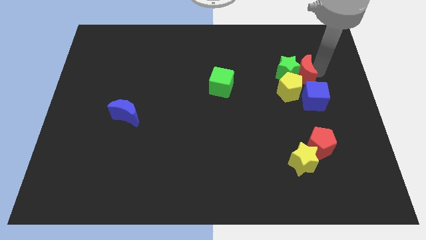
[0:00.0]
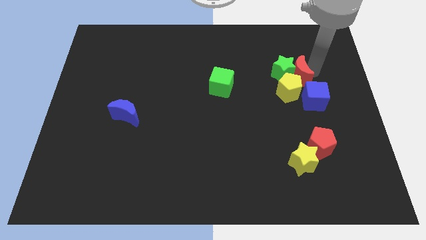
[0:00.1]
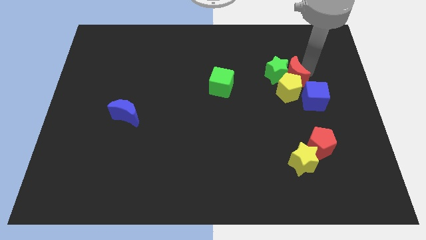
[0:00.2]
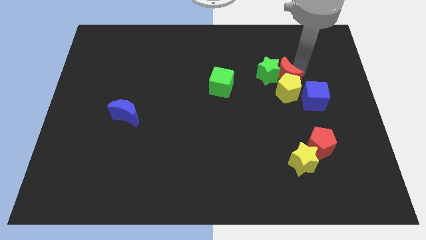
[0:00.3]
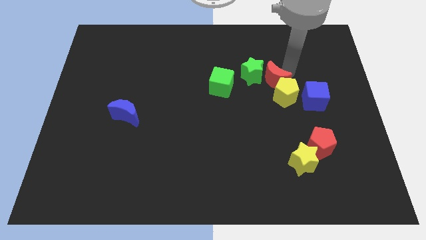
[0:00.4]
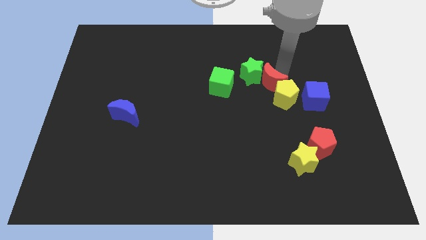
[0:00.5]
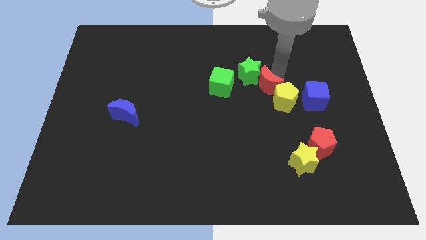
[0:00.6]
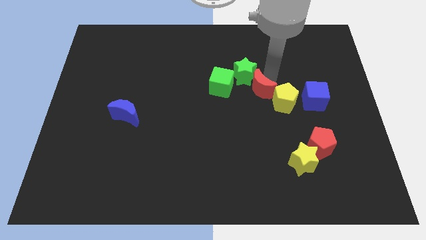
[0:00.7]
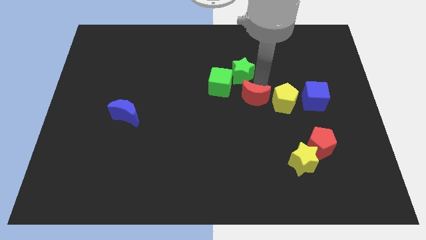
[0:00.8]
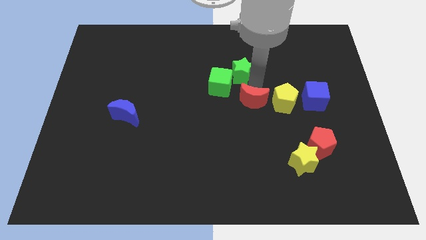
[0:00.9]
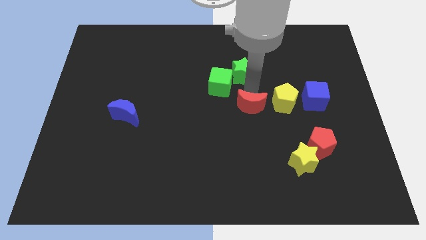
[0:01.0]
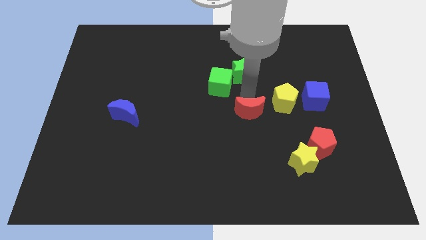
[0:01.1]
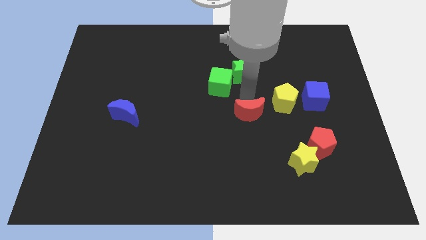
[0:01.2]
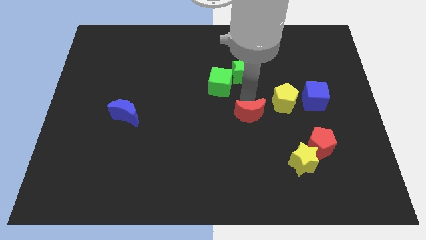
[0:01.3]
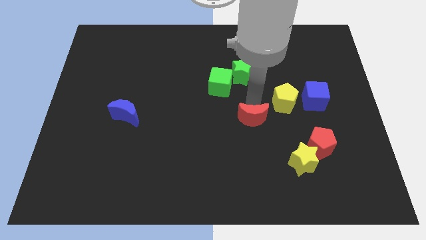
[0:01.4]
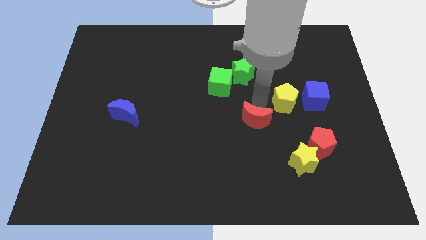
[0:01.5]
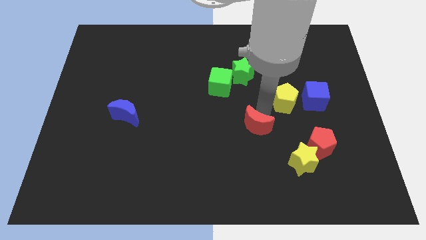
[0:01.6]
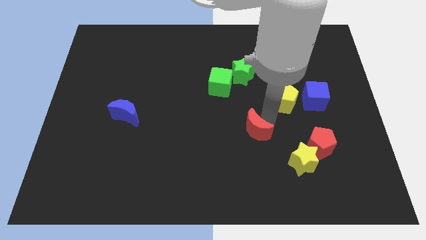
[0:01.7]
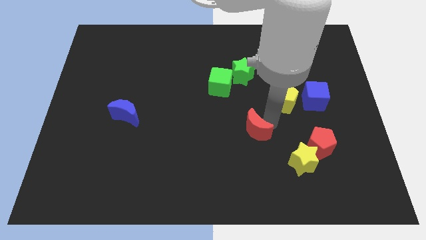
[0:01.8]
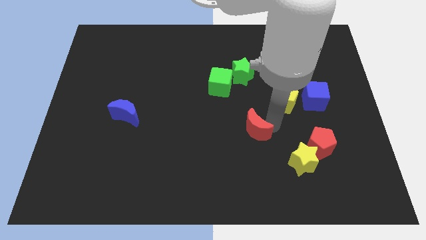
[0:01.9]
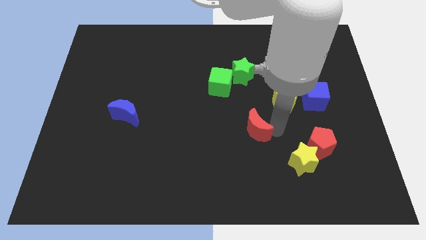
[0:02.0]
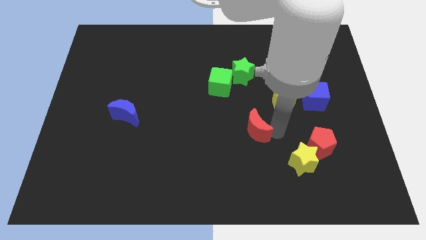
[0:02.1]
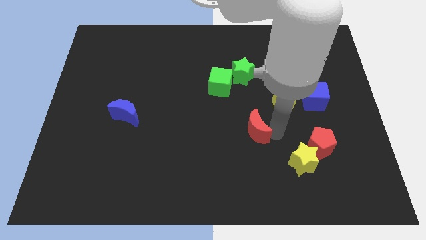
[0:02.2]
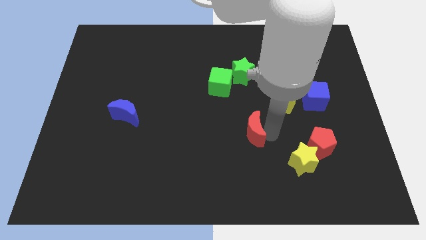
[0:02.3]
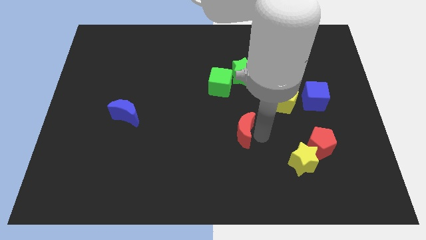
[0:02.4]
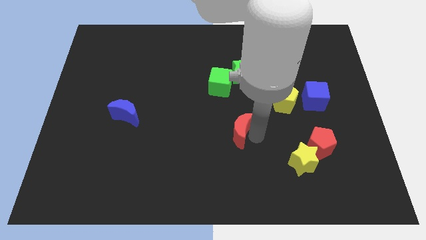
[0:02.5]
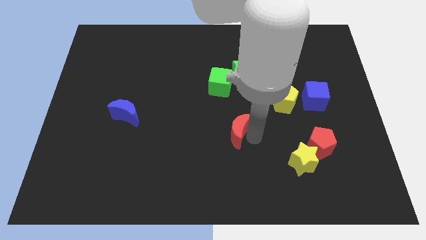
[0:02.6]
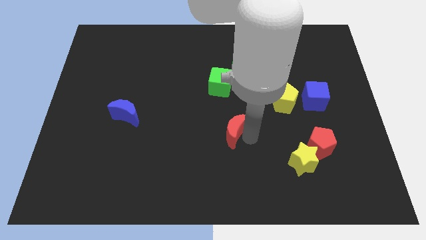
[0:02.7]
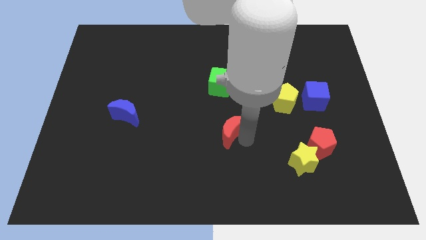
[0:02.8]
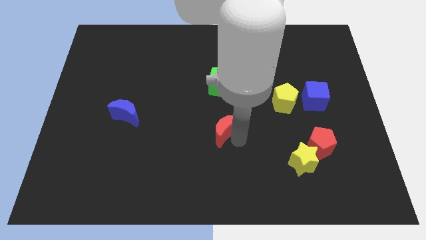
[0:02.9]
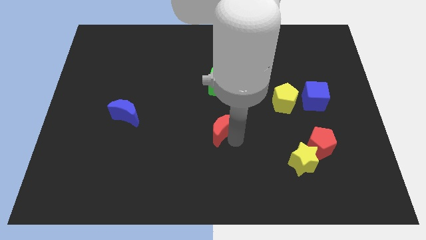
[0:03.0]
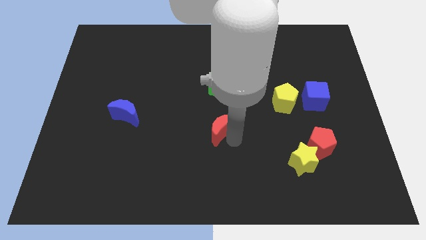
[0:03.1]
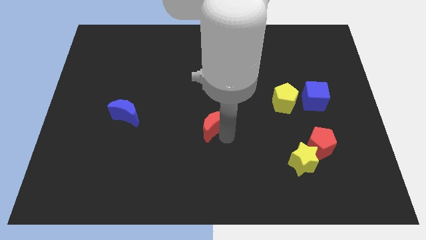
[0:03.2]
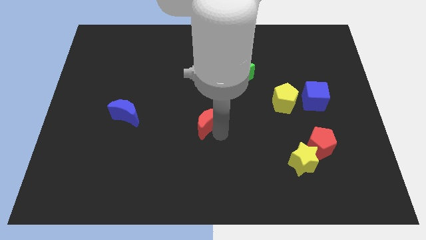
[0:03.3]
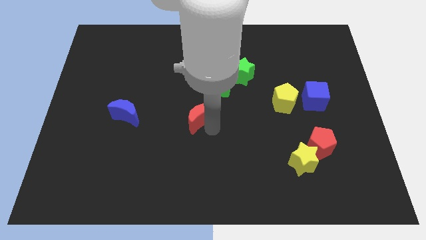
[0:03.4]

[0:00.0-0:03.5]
separate the green star yellow pentagon and the red moon

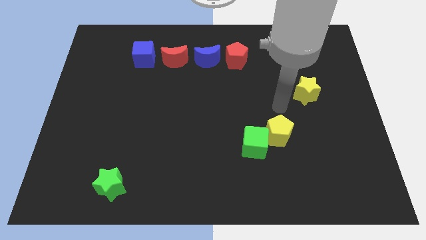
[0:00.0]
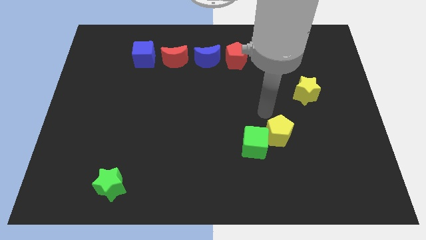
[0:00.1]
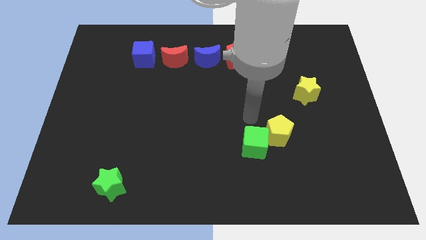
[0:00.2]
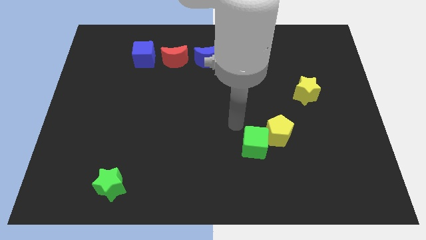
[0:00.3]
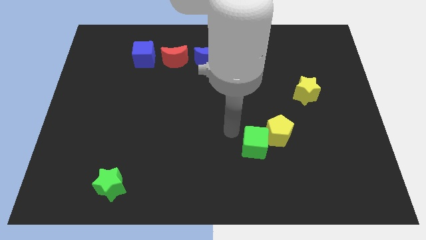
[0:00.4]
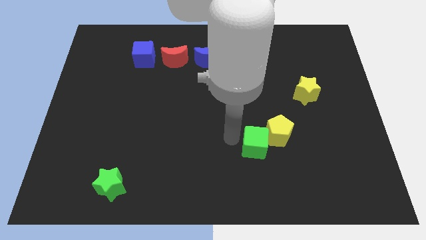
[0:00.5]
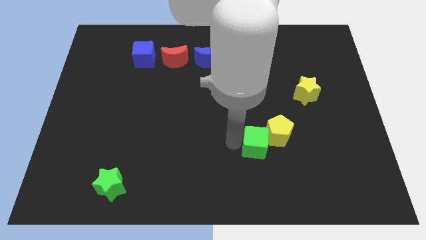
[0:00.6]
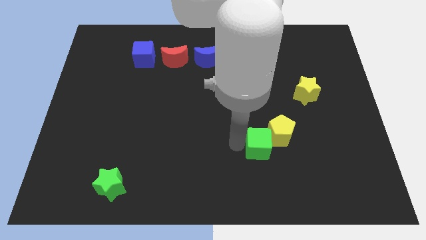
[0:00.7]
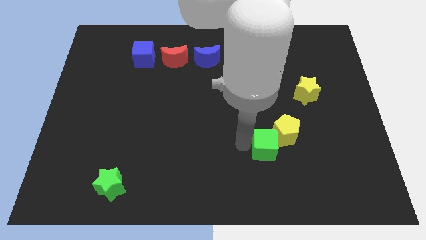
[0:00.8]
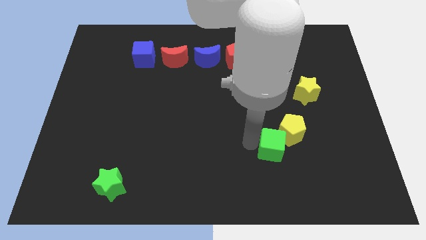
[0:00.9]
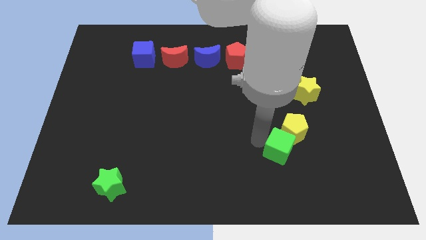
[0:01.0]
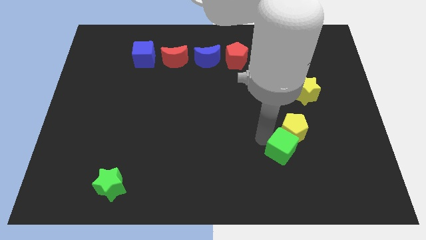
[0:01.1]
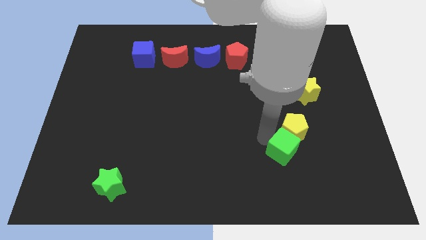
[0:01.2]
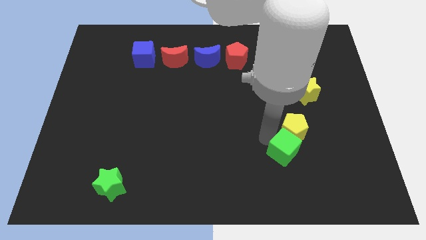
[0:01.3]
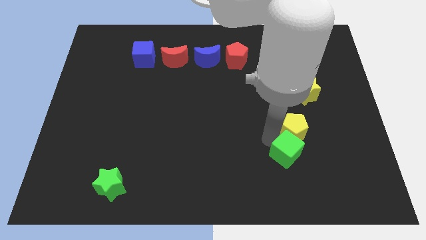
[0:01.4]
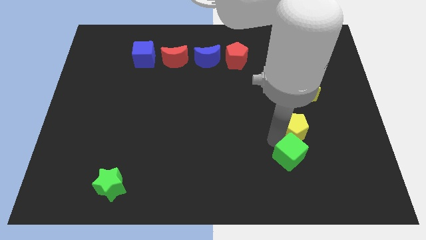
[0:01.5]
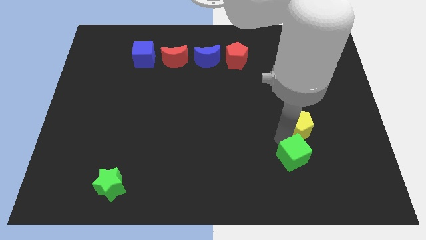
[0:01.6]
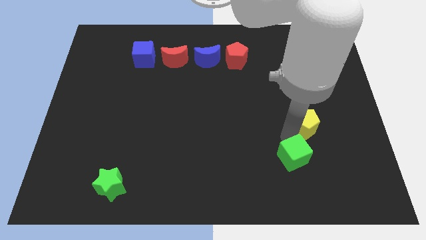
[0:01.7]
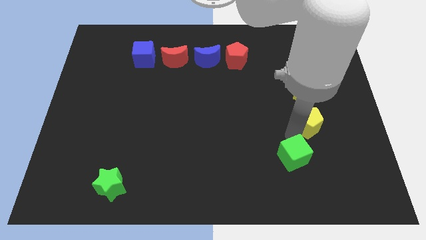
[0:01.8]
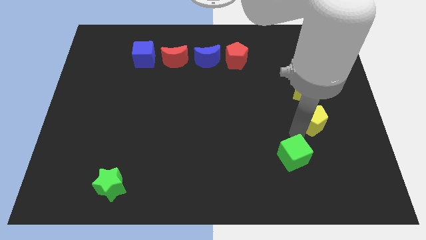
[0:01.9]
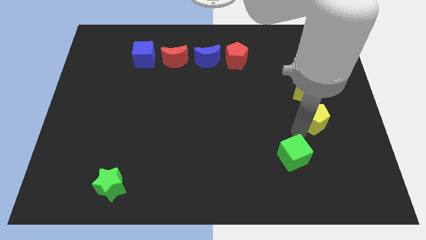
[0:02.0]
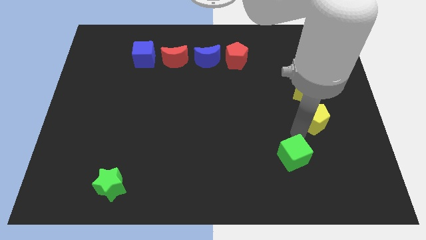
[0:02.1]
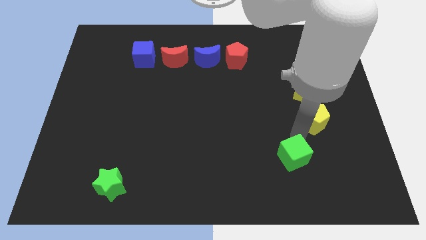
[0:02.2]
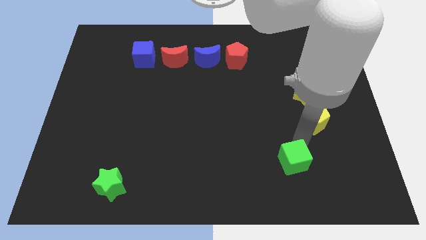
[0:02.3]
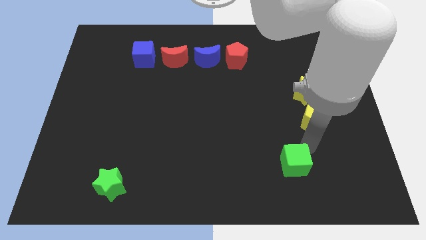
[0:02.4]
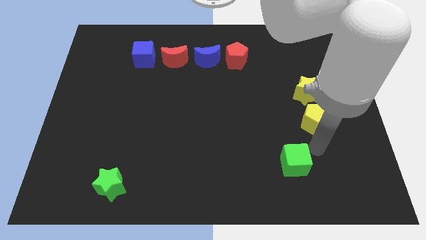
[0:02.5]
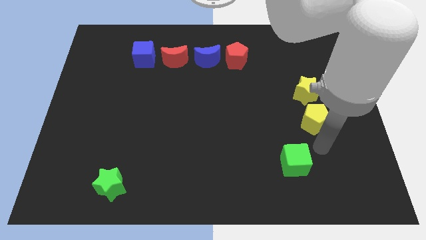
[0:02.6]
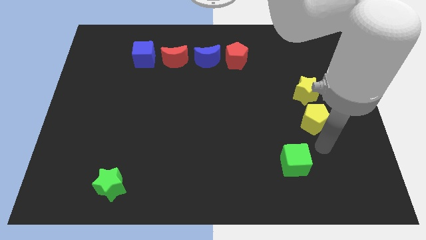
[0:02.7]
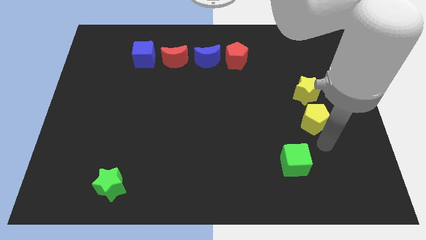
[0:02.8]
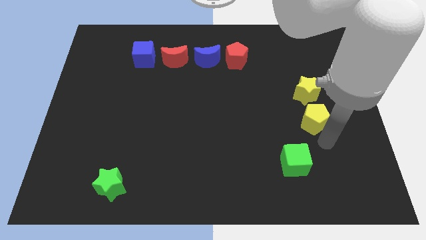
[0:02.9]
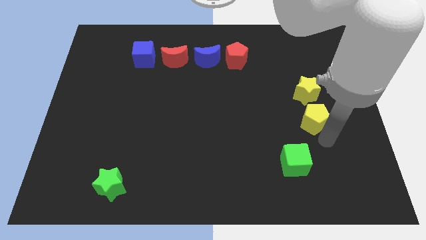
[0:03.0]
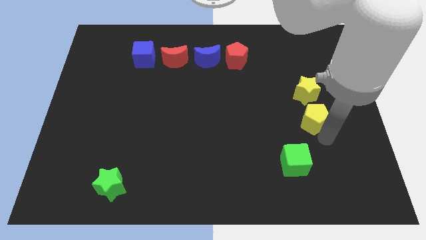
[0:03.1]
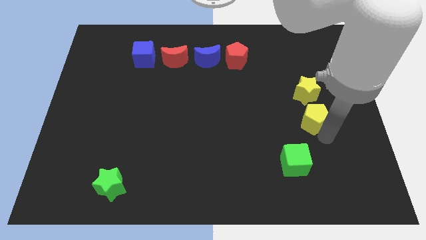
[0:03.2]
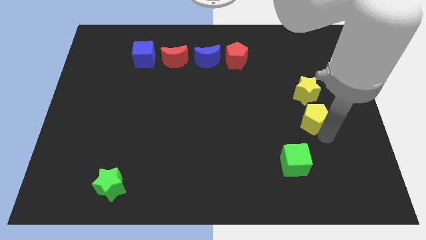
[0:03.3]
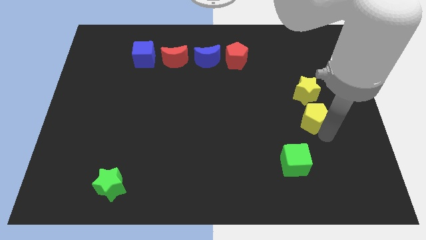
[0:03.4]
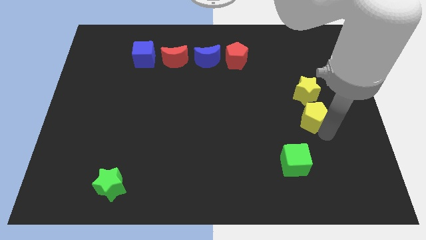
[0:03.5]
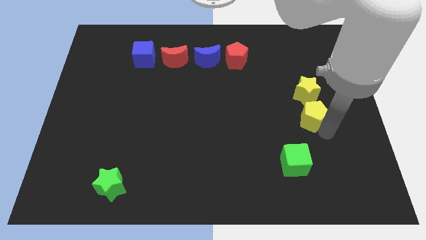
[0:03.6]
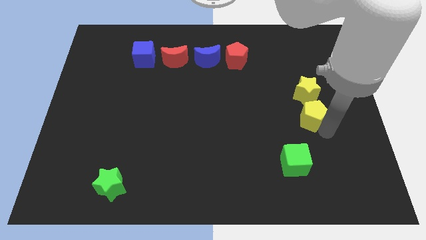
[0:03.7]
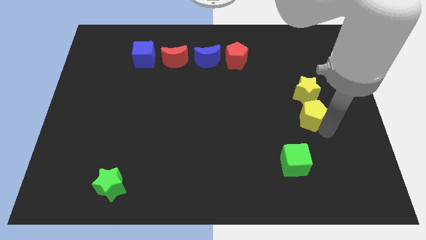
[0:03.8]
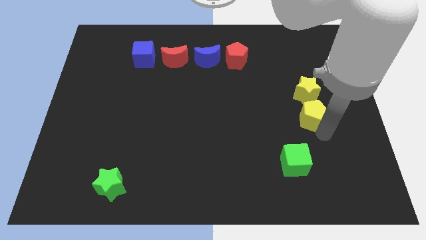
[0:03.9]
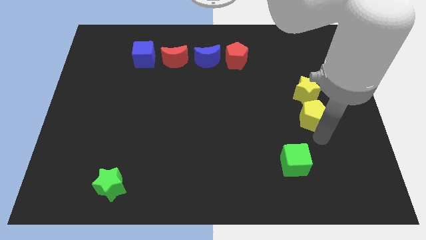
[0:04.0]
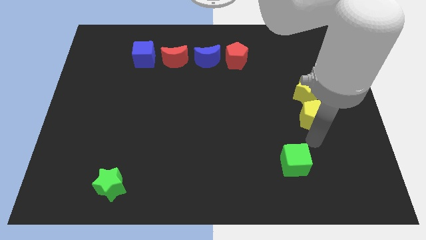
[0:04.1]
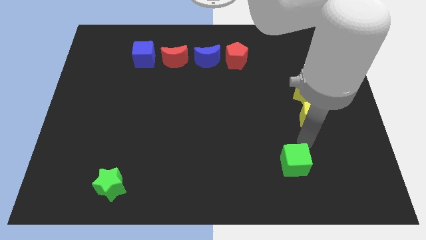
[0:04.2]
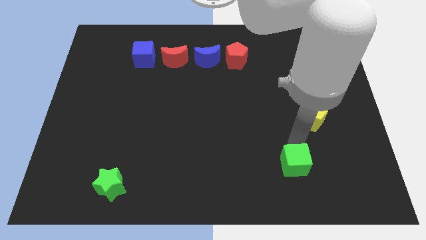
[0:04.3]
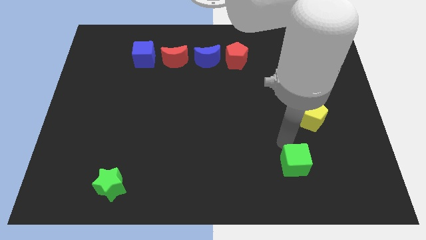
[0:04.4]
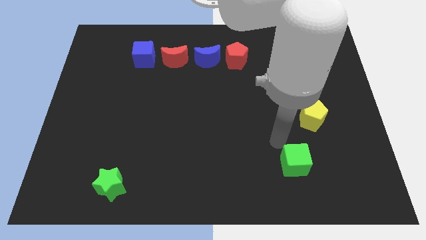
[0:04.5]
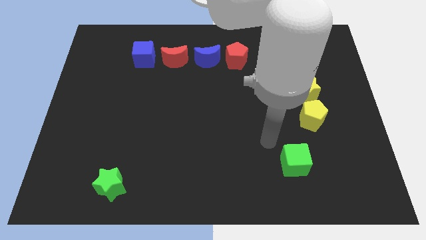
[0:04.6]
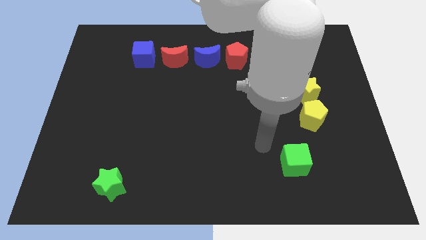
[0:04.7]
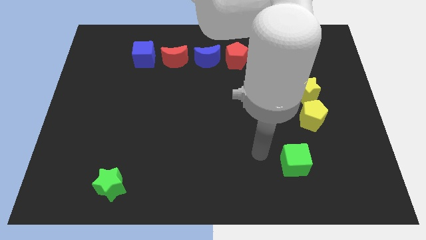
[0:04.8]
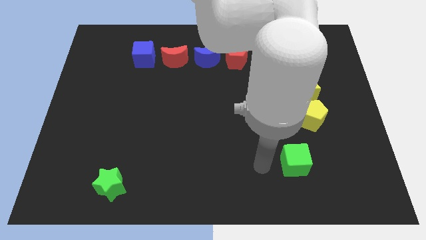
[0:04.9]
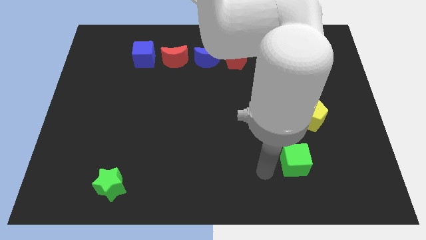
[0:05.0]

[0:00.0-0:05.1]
separate the green cube and the yellow pentagon

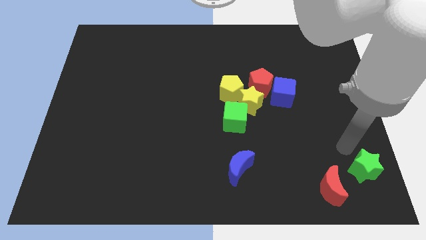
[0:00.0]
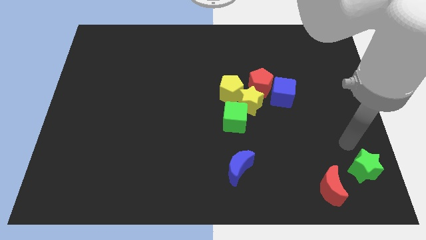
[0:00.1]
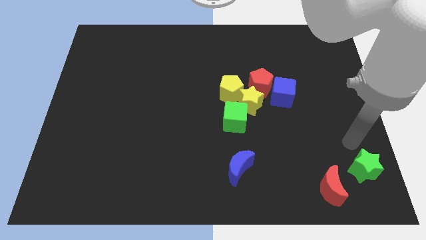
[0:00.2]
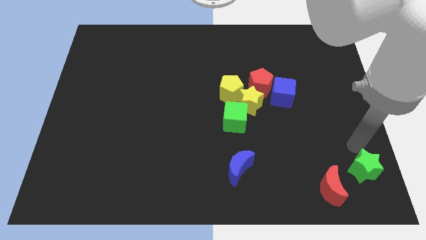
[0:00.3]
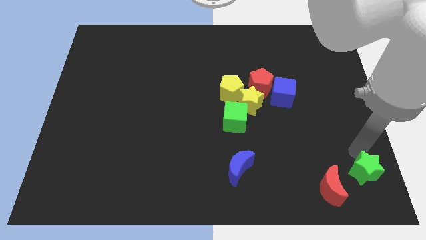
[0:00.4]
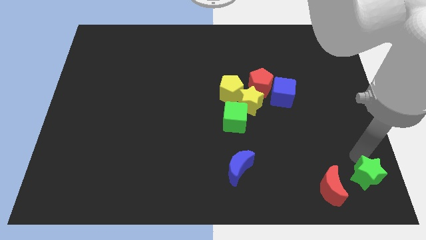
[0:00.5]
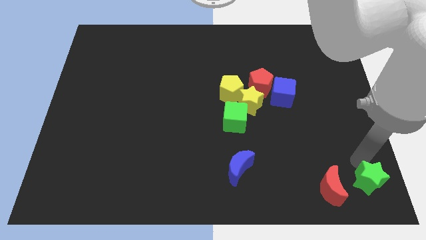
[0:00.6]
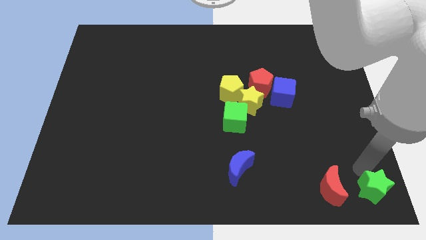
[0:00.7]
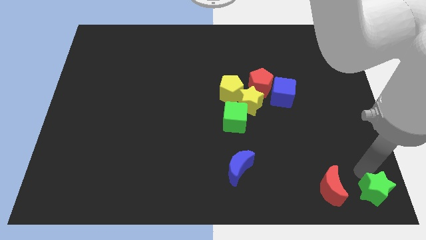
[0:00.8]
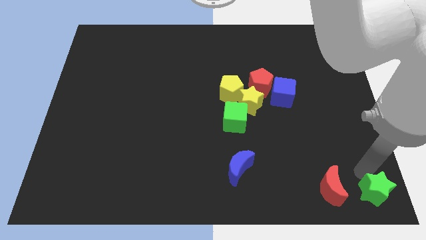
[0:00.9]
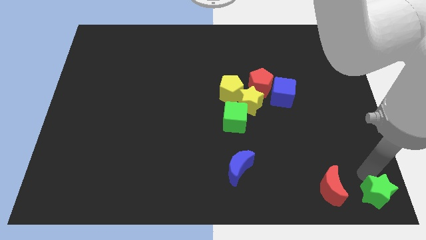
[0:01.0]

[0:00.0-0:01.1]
move green star at bottom right corner
